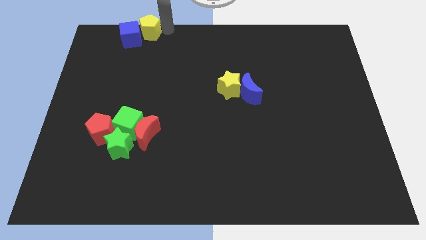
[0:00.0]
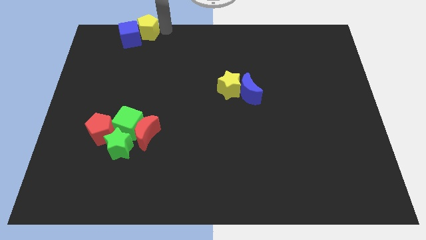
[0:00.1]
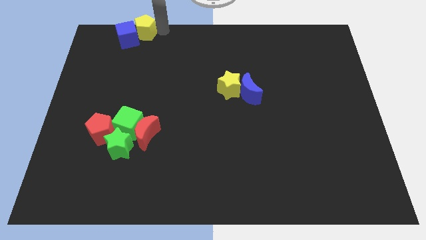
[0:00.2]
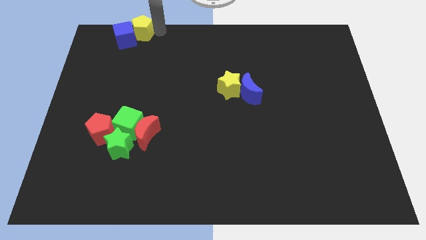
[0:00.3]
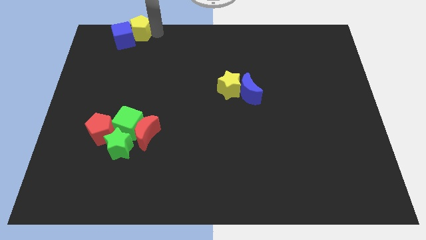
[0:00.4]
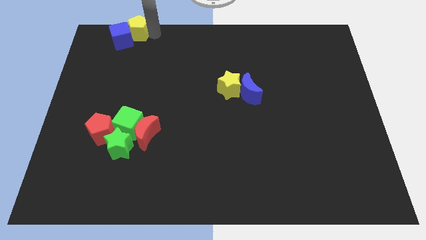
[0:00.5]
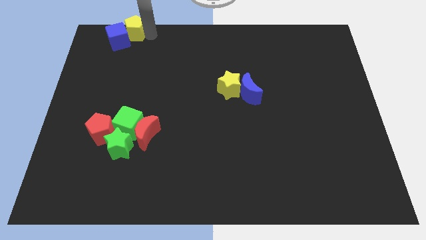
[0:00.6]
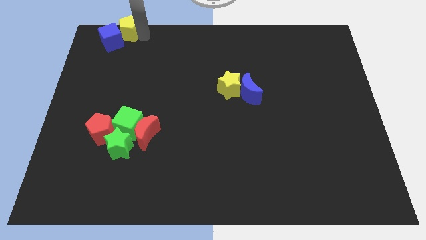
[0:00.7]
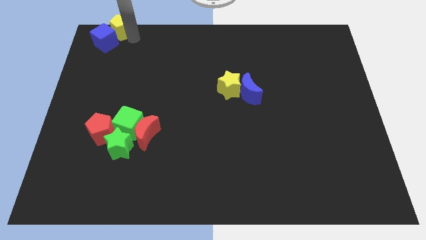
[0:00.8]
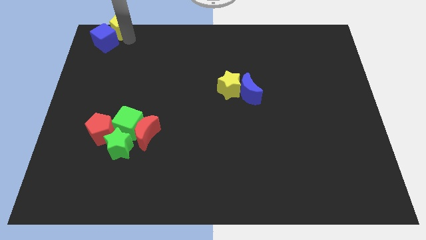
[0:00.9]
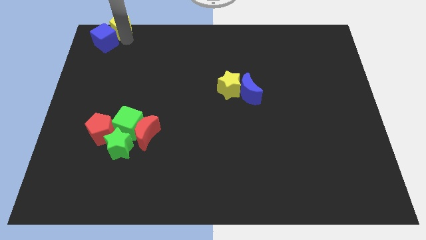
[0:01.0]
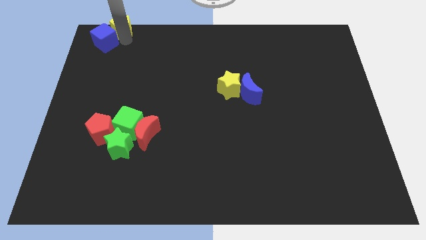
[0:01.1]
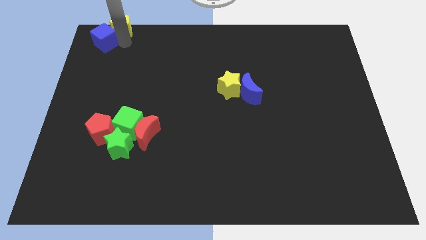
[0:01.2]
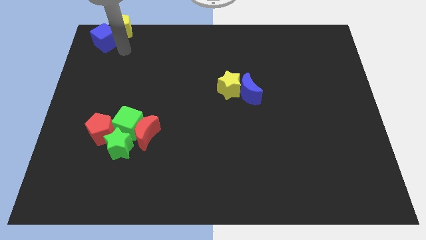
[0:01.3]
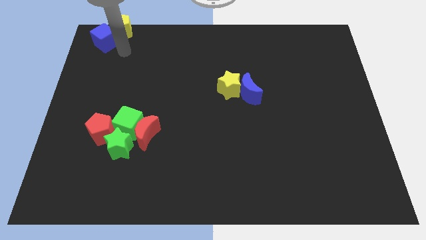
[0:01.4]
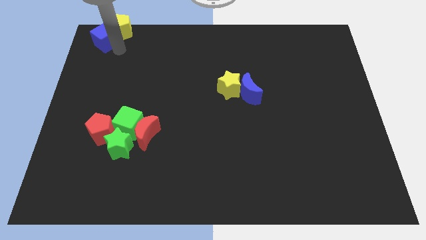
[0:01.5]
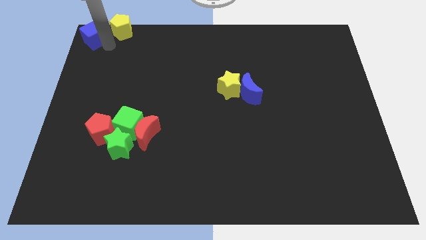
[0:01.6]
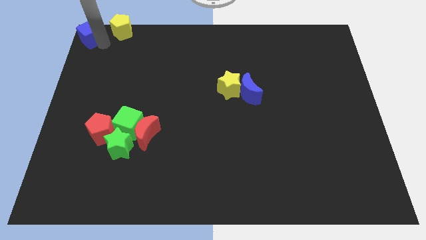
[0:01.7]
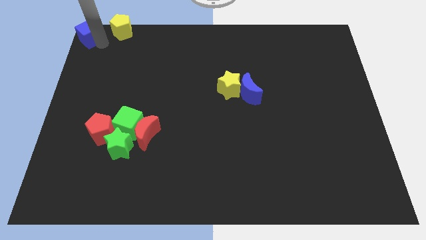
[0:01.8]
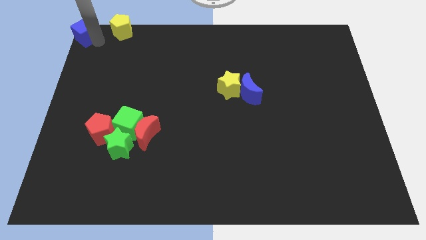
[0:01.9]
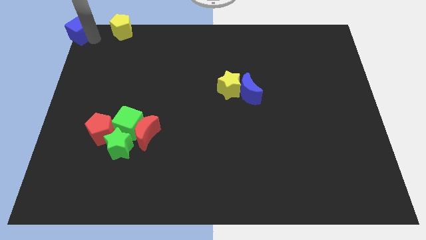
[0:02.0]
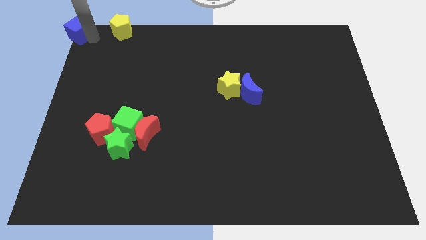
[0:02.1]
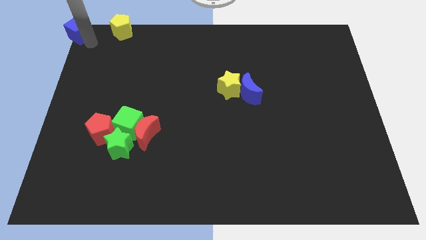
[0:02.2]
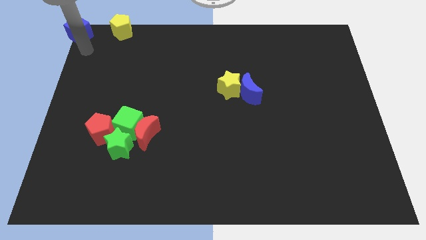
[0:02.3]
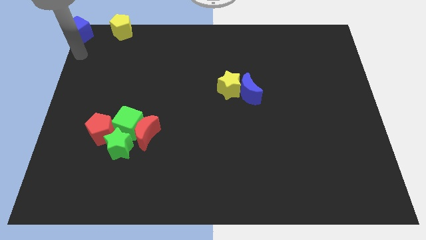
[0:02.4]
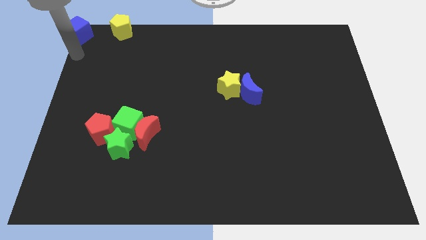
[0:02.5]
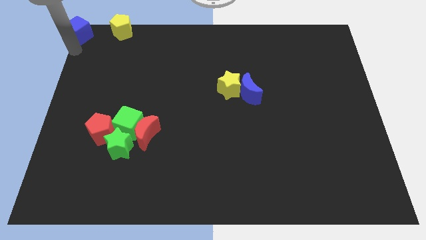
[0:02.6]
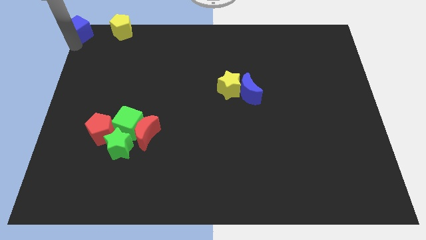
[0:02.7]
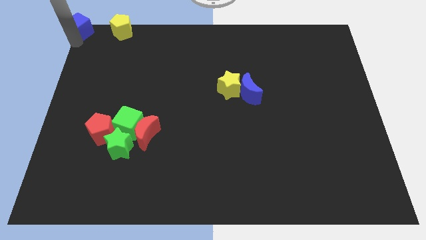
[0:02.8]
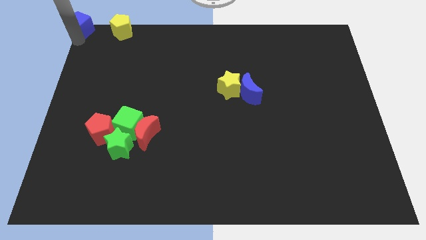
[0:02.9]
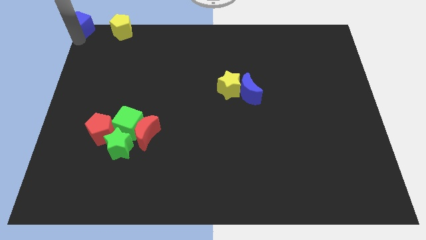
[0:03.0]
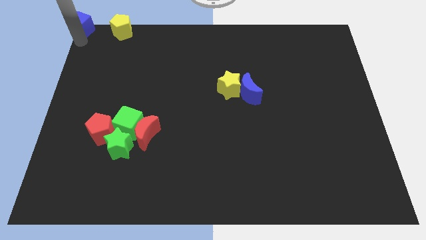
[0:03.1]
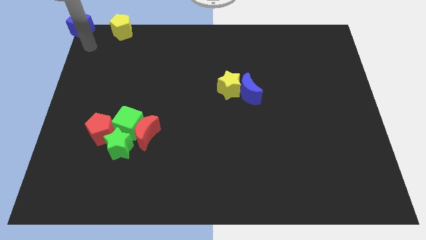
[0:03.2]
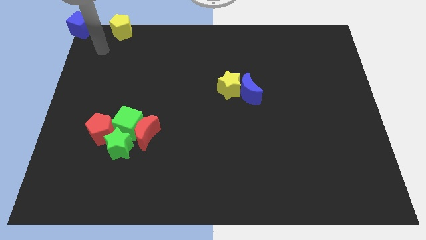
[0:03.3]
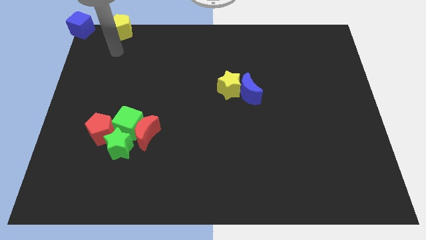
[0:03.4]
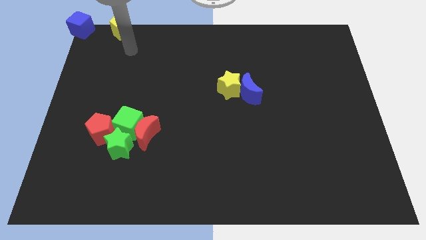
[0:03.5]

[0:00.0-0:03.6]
push the blue cube to the top left corner of the board

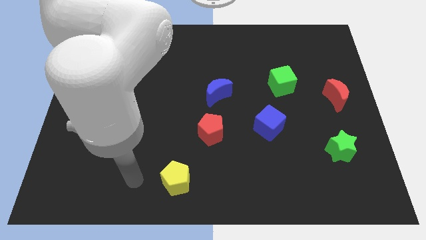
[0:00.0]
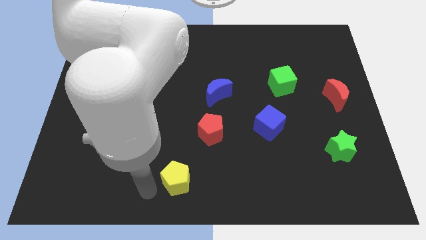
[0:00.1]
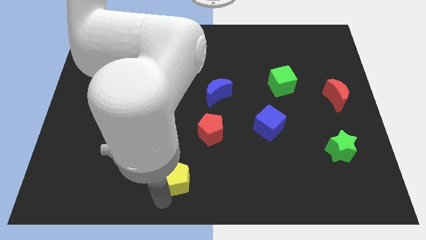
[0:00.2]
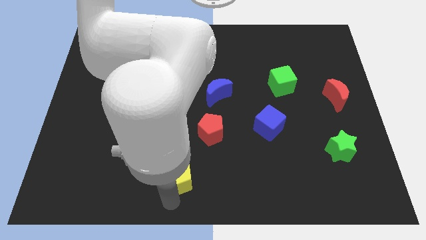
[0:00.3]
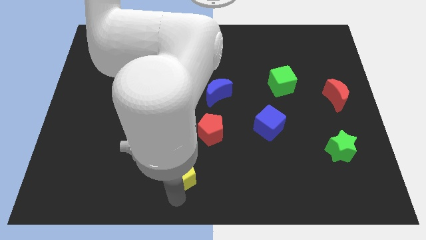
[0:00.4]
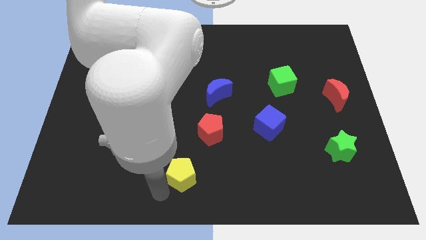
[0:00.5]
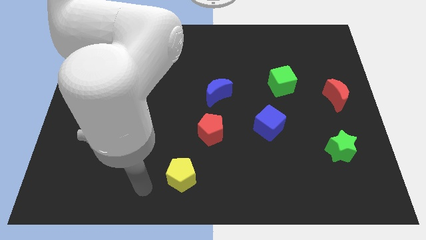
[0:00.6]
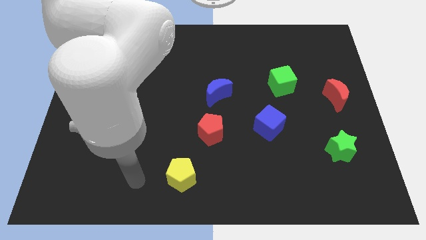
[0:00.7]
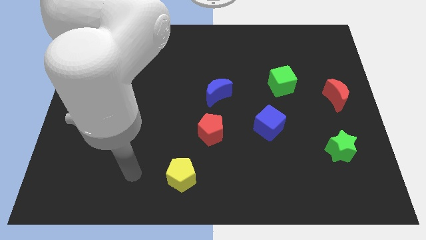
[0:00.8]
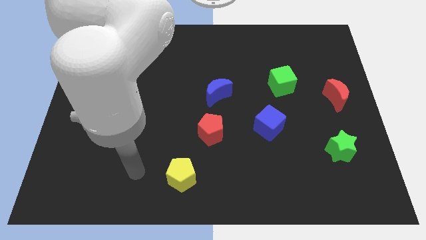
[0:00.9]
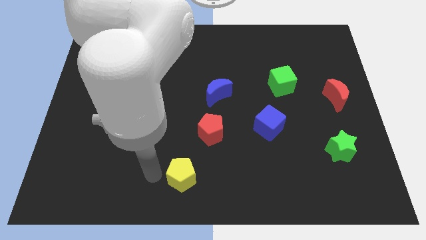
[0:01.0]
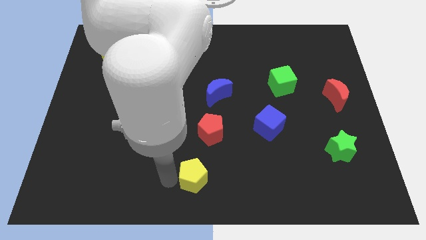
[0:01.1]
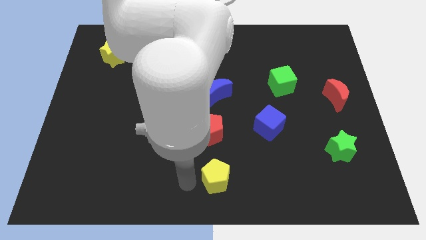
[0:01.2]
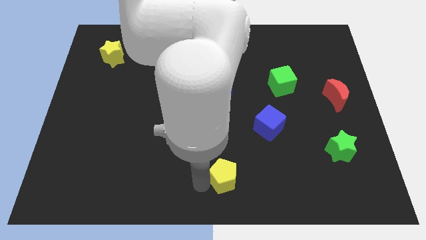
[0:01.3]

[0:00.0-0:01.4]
move the yellow pentagon to the bottom center of the board

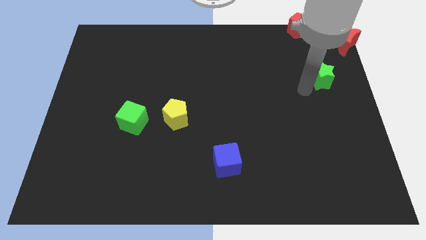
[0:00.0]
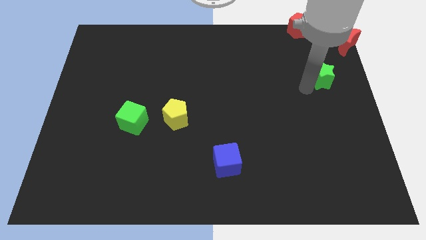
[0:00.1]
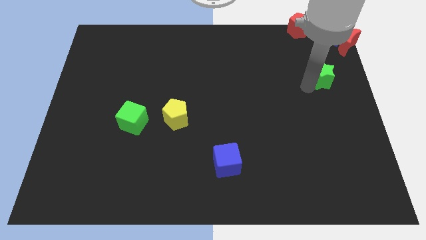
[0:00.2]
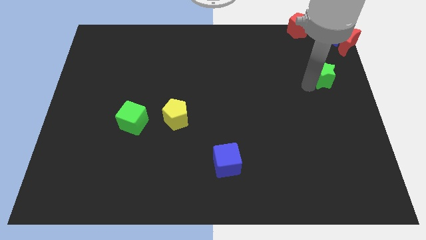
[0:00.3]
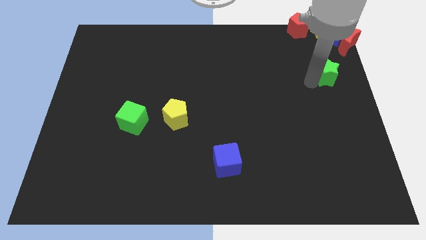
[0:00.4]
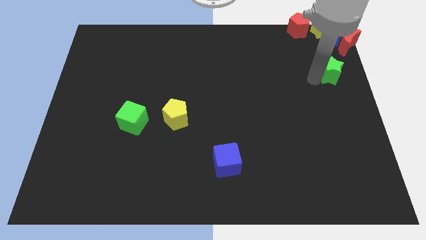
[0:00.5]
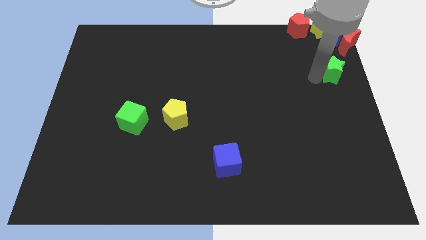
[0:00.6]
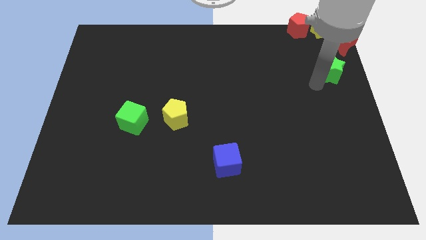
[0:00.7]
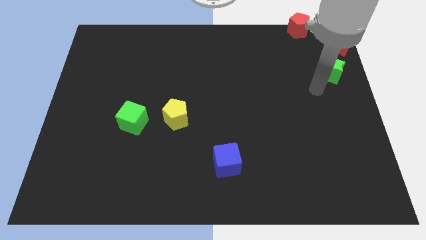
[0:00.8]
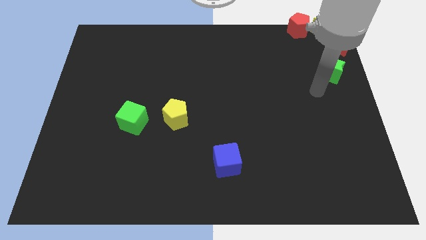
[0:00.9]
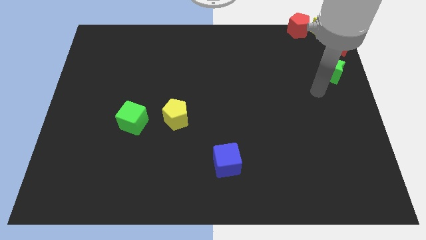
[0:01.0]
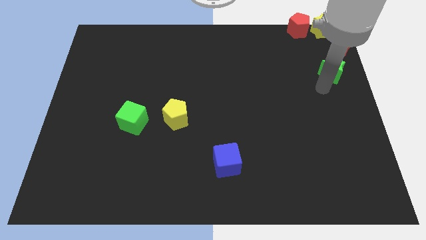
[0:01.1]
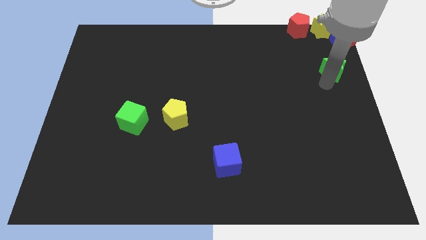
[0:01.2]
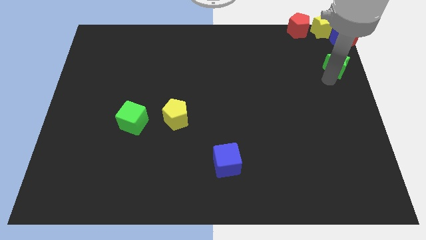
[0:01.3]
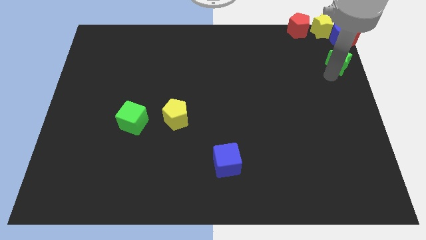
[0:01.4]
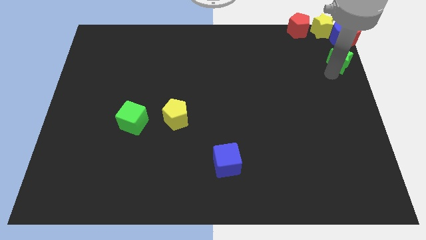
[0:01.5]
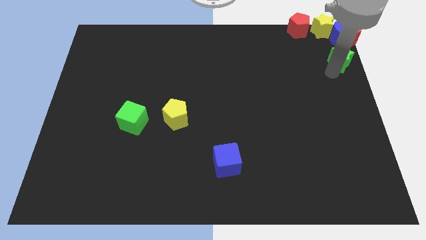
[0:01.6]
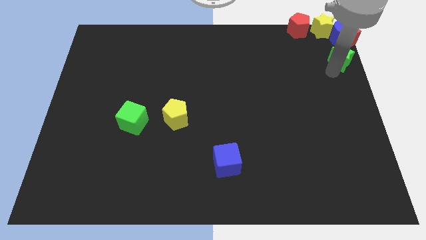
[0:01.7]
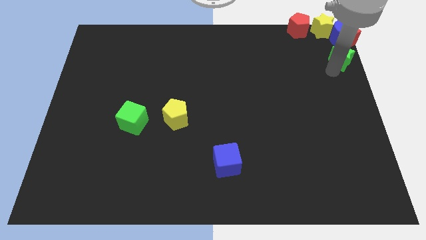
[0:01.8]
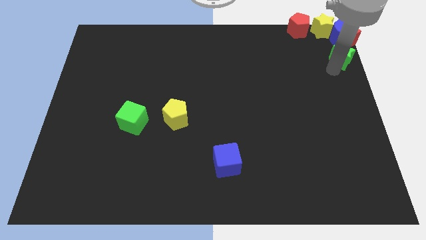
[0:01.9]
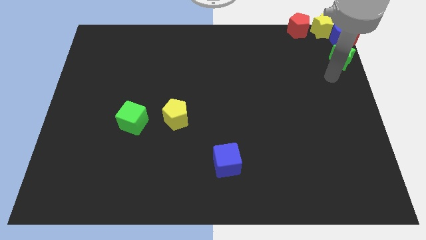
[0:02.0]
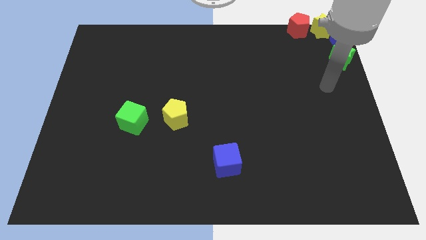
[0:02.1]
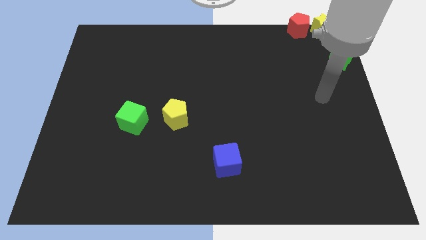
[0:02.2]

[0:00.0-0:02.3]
move green star into the bottom of the red moon

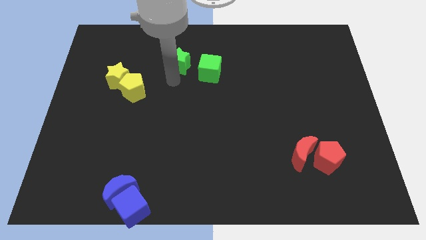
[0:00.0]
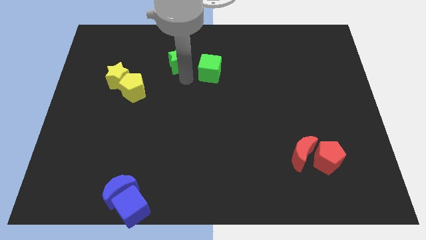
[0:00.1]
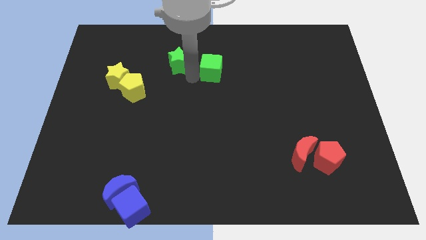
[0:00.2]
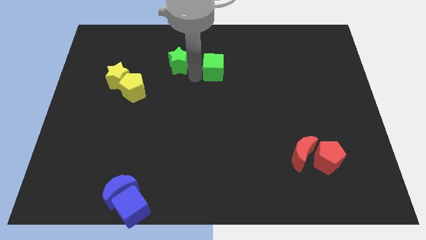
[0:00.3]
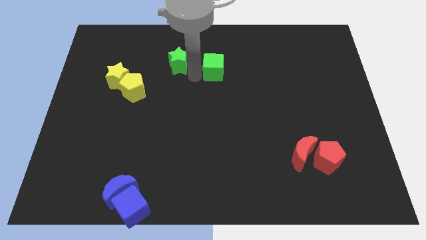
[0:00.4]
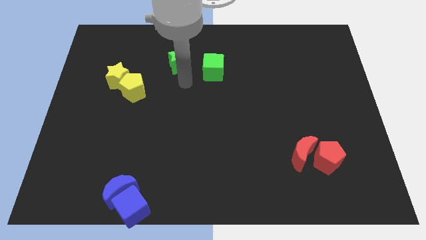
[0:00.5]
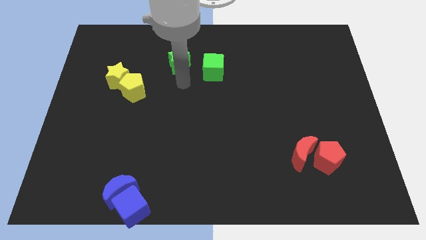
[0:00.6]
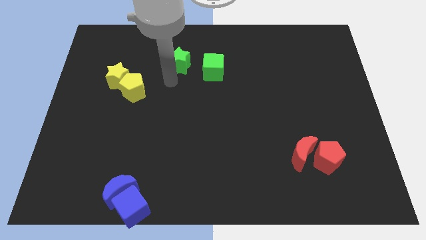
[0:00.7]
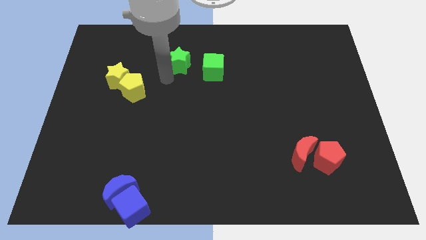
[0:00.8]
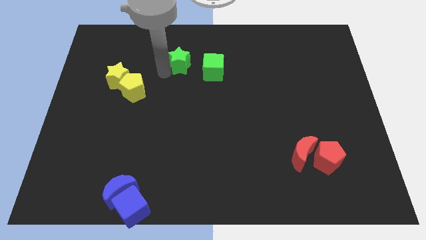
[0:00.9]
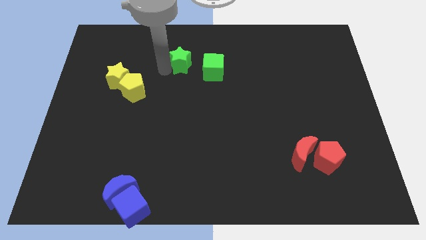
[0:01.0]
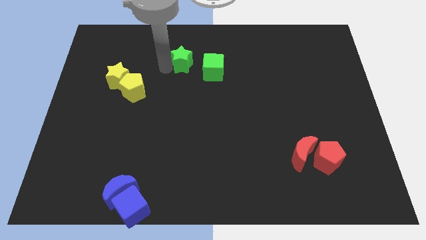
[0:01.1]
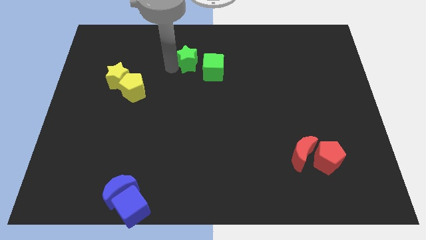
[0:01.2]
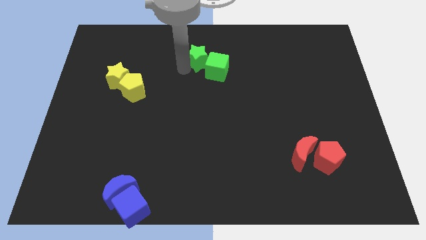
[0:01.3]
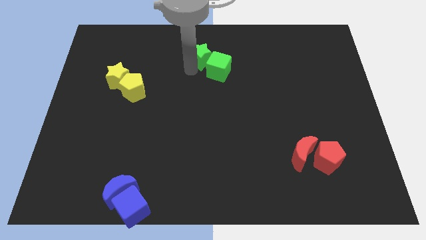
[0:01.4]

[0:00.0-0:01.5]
move green star close to the green cube
